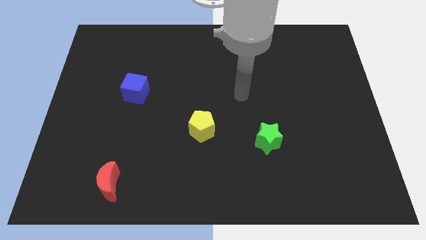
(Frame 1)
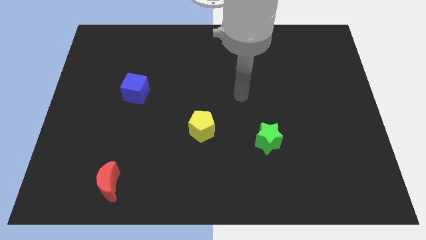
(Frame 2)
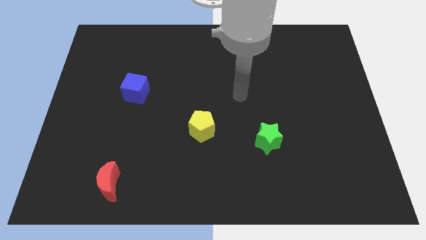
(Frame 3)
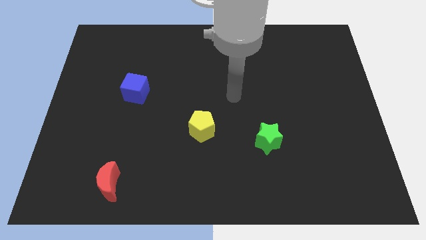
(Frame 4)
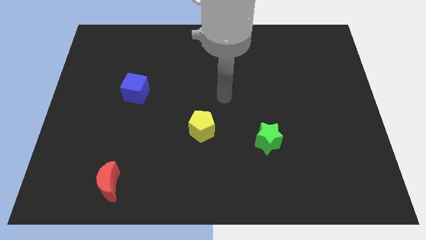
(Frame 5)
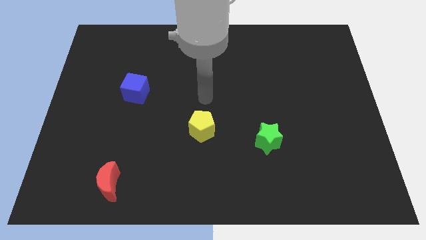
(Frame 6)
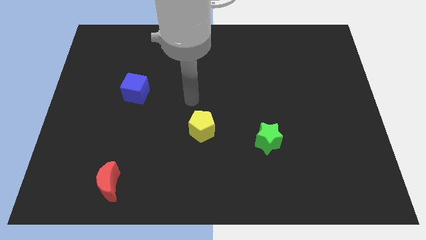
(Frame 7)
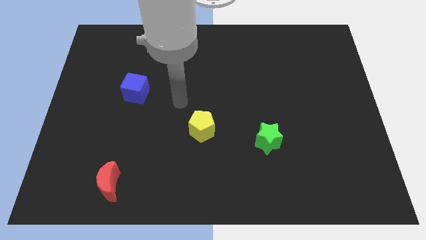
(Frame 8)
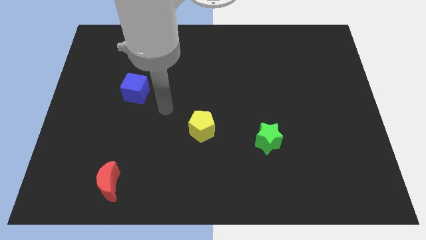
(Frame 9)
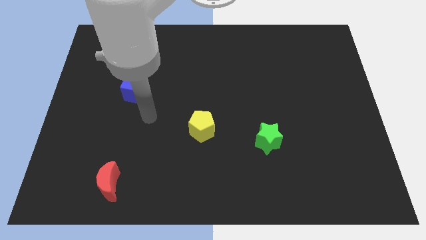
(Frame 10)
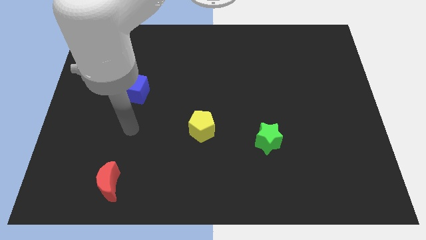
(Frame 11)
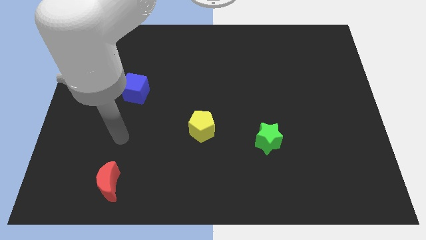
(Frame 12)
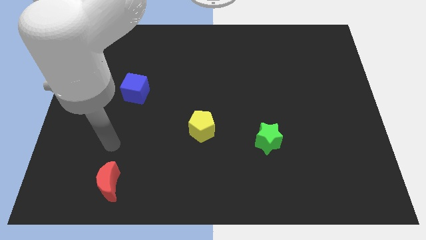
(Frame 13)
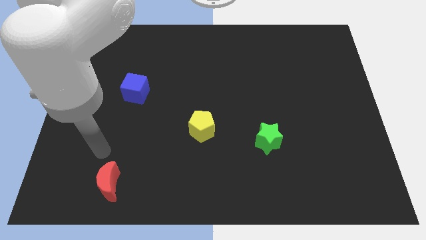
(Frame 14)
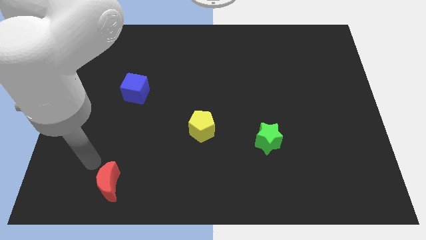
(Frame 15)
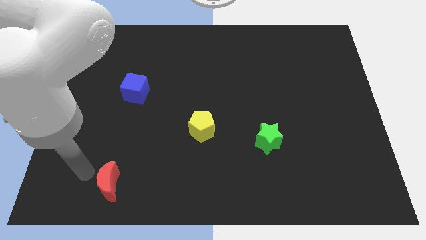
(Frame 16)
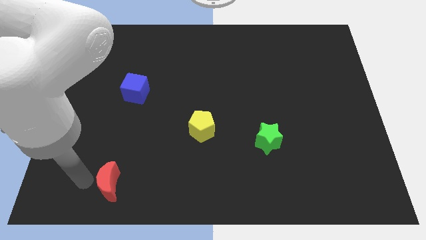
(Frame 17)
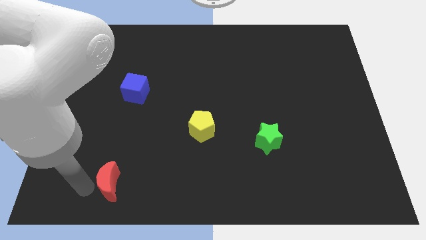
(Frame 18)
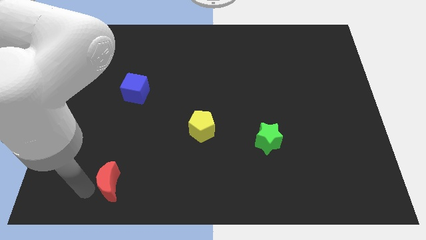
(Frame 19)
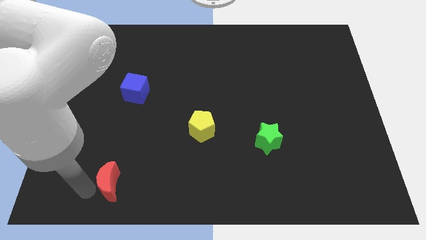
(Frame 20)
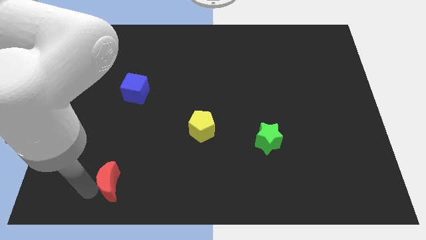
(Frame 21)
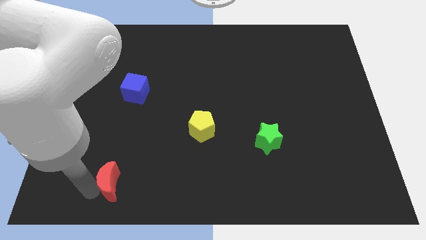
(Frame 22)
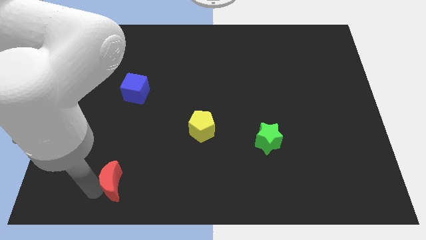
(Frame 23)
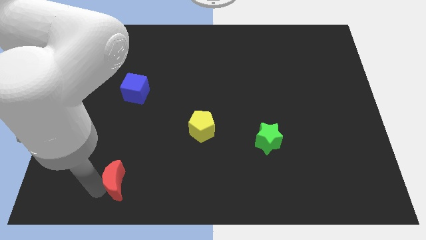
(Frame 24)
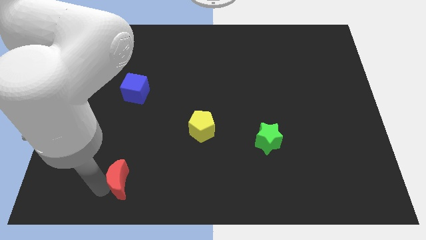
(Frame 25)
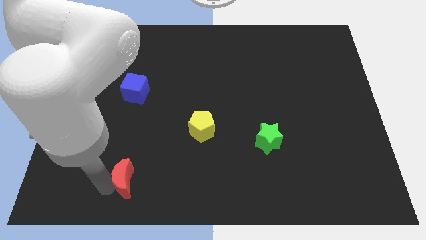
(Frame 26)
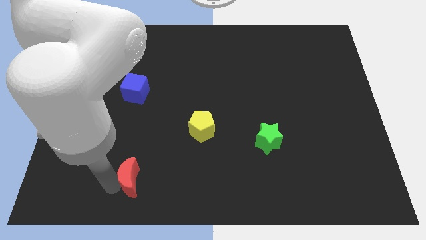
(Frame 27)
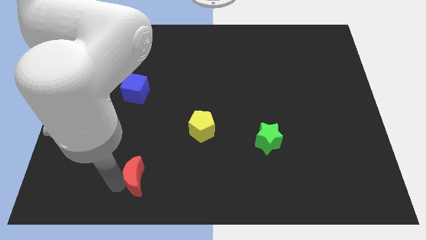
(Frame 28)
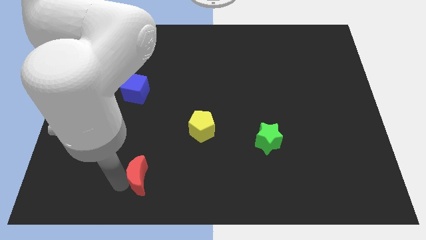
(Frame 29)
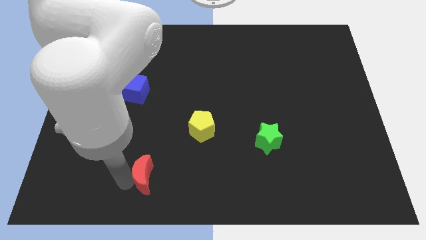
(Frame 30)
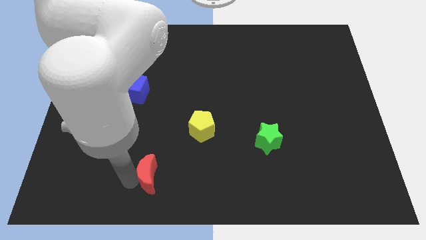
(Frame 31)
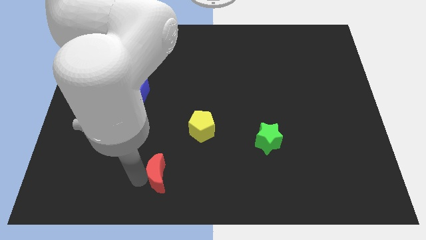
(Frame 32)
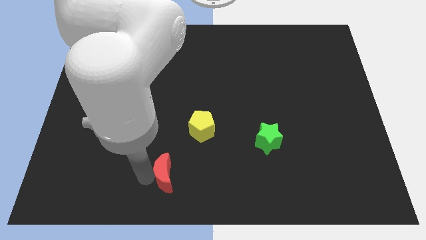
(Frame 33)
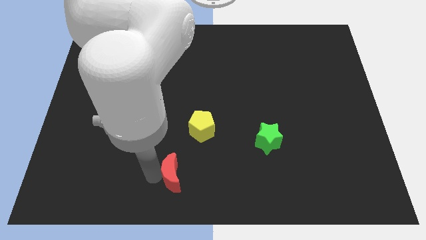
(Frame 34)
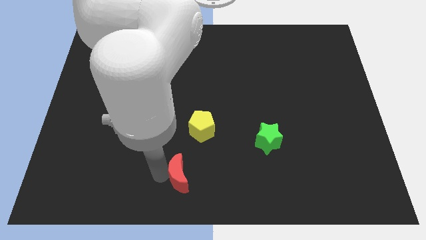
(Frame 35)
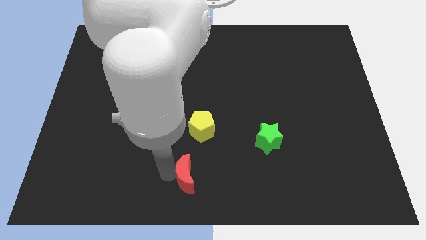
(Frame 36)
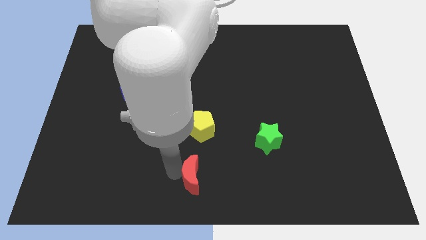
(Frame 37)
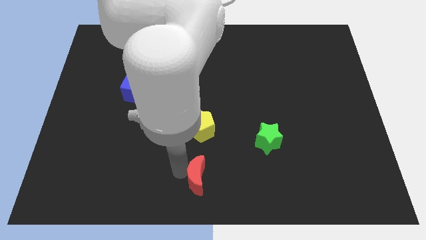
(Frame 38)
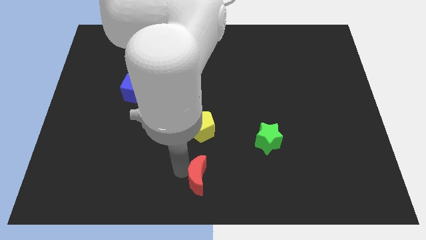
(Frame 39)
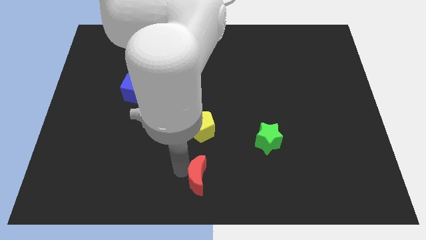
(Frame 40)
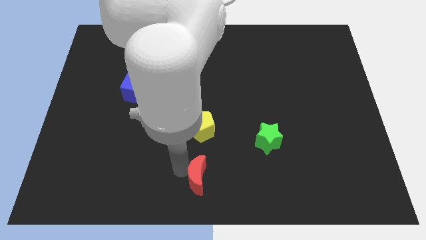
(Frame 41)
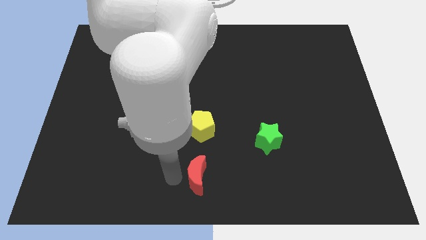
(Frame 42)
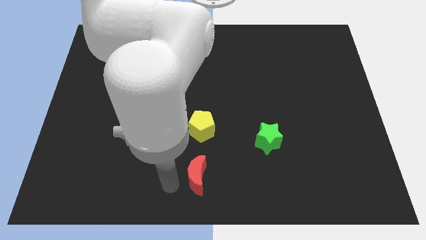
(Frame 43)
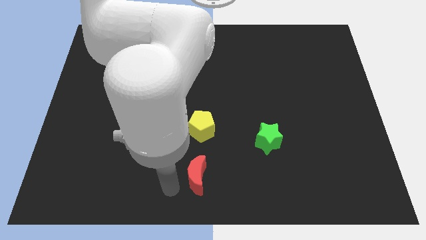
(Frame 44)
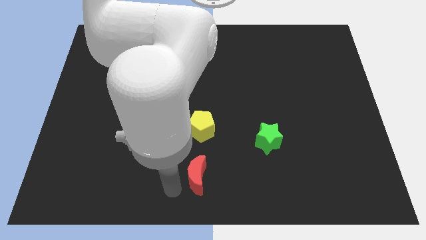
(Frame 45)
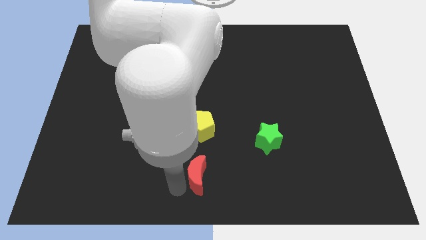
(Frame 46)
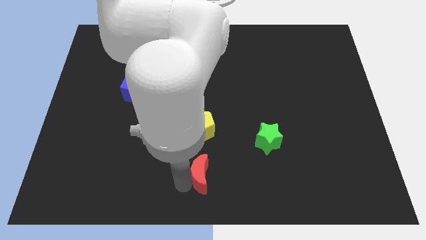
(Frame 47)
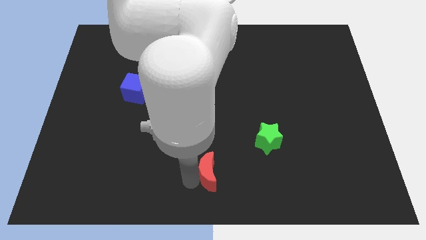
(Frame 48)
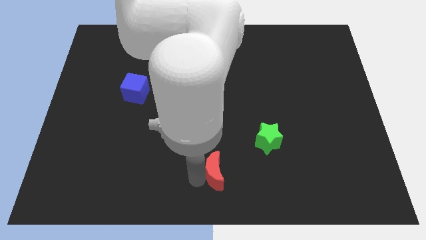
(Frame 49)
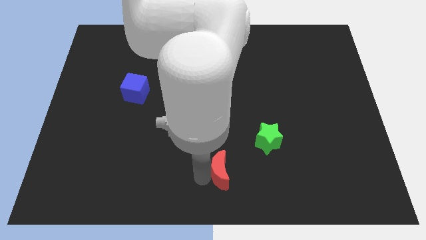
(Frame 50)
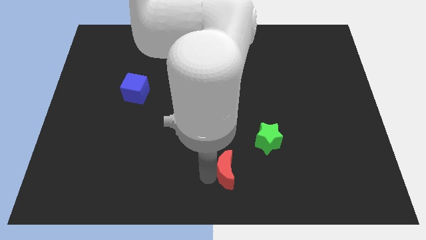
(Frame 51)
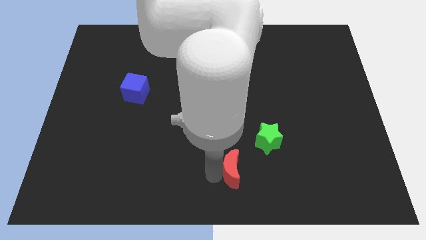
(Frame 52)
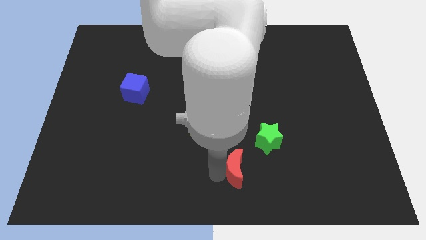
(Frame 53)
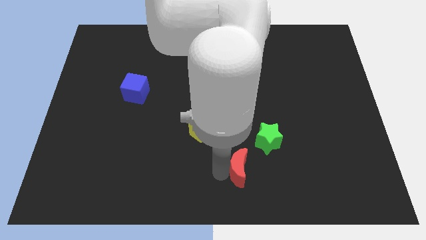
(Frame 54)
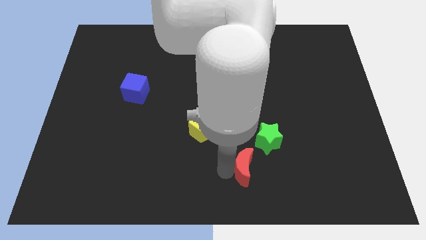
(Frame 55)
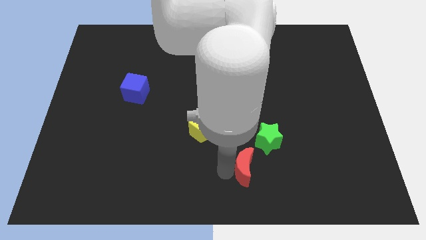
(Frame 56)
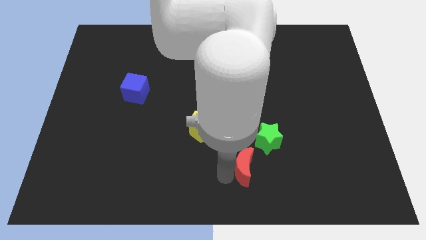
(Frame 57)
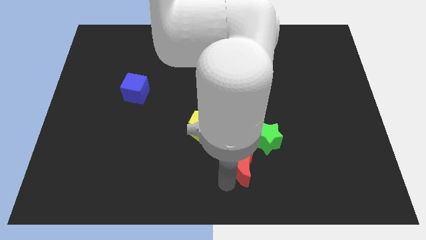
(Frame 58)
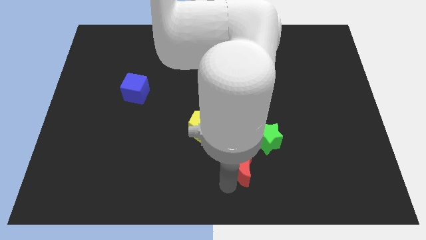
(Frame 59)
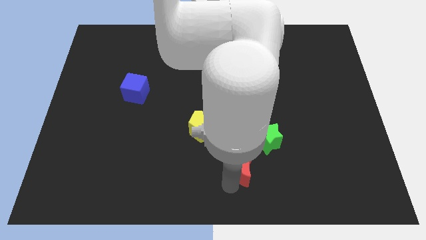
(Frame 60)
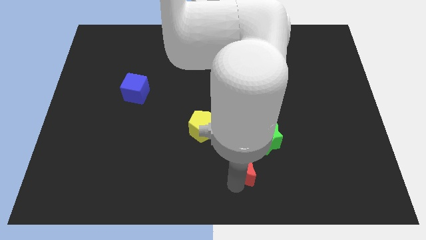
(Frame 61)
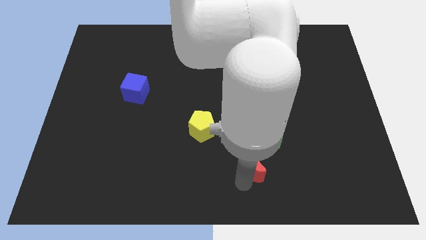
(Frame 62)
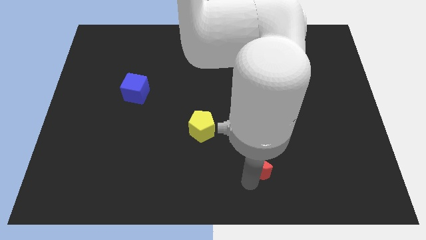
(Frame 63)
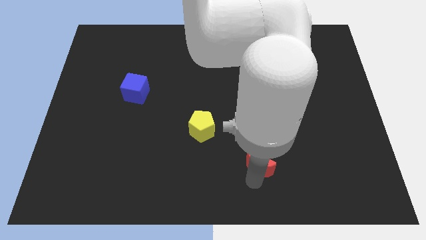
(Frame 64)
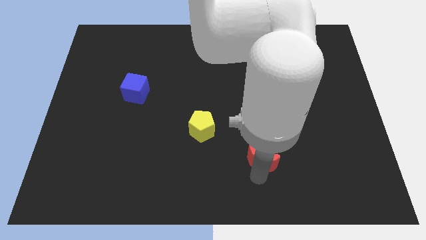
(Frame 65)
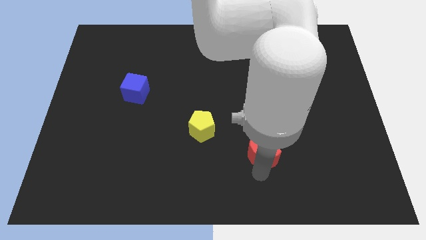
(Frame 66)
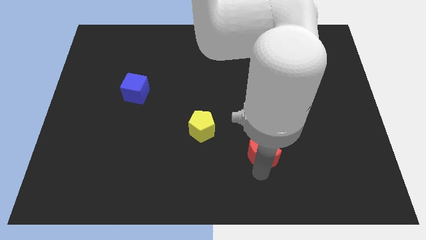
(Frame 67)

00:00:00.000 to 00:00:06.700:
push the moon next to the green star

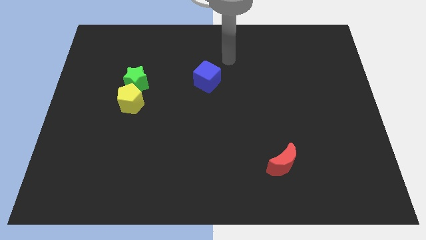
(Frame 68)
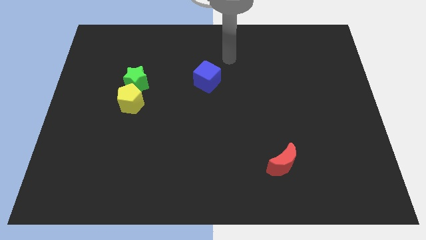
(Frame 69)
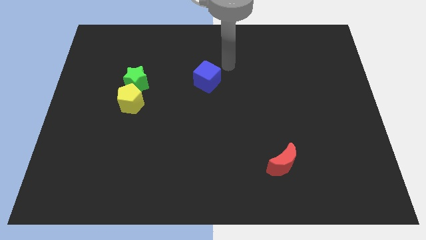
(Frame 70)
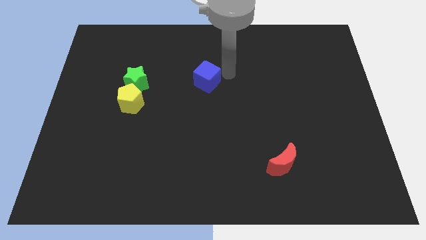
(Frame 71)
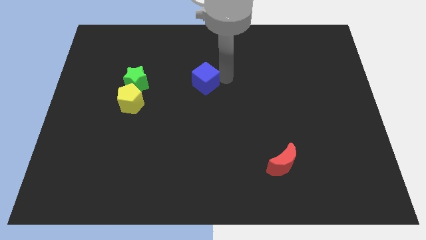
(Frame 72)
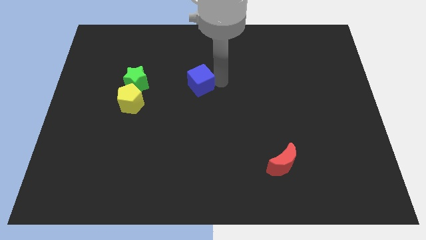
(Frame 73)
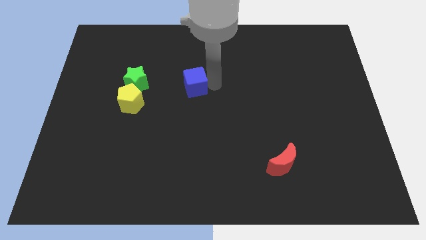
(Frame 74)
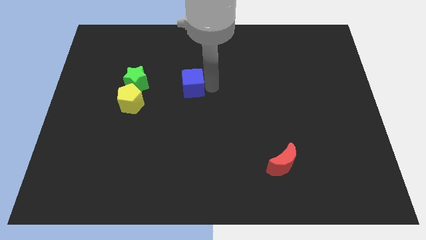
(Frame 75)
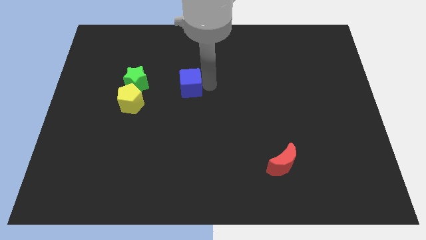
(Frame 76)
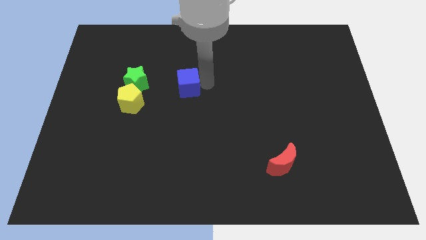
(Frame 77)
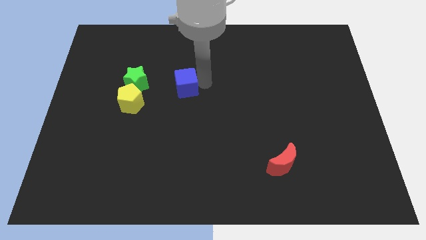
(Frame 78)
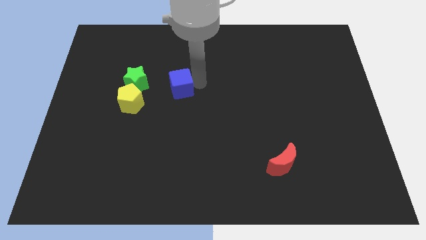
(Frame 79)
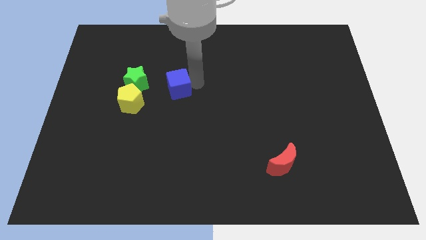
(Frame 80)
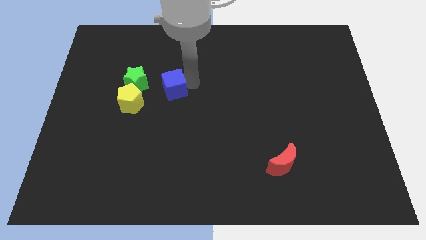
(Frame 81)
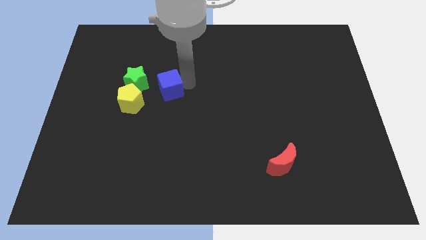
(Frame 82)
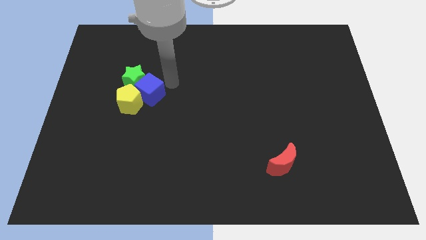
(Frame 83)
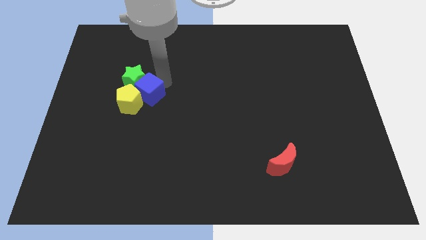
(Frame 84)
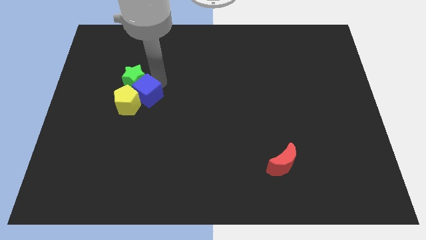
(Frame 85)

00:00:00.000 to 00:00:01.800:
move the blue block to the pentagon
